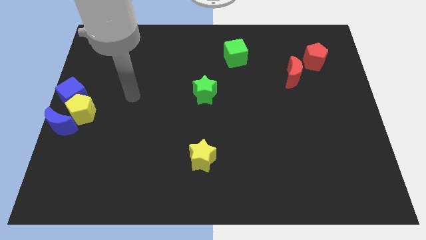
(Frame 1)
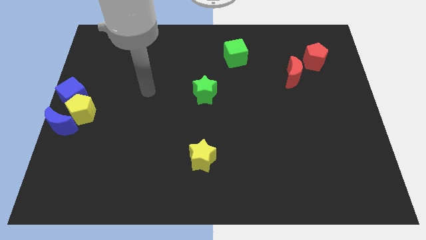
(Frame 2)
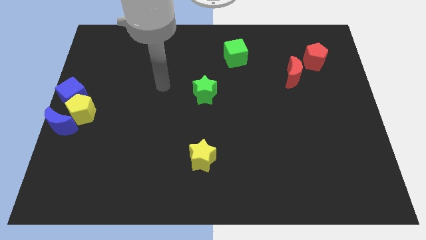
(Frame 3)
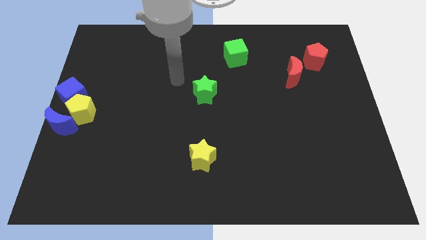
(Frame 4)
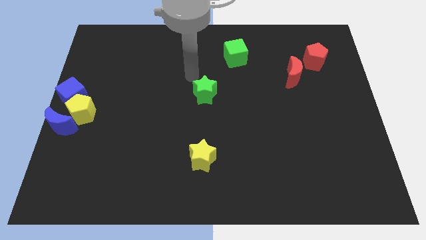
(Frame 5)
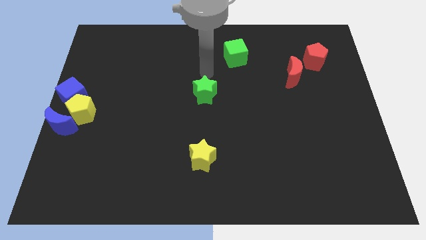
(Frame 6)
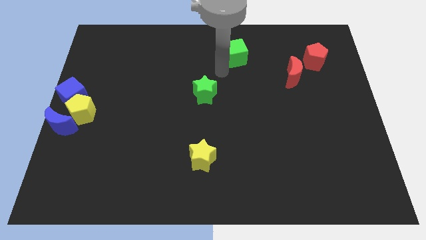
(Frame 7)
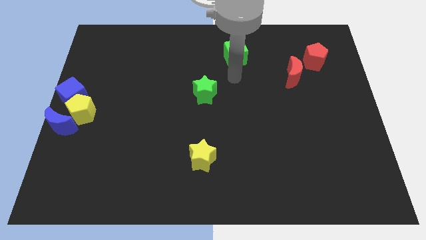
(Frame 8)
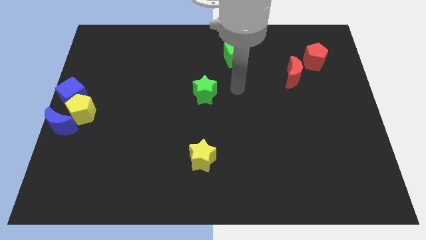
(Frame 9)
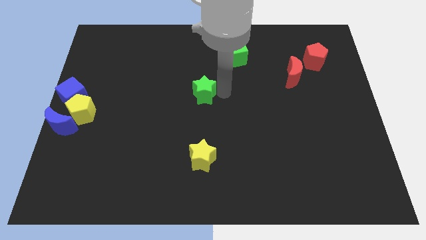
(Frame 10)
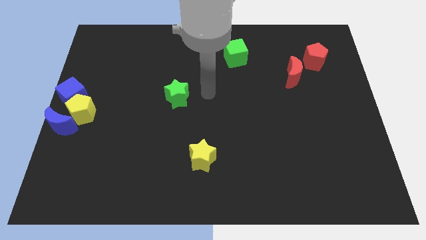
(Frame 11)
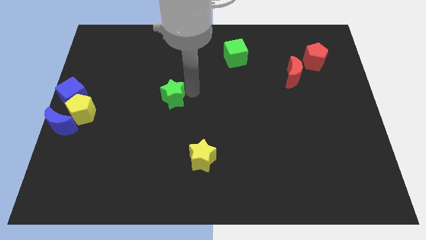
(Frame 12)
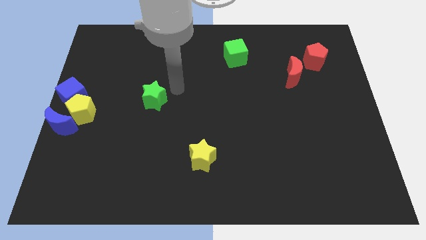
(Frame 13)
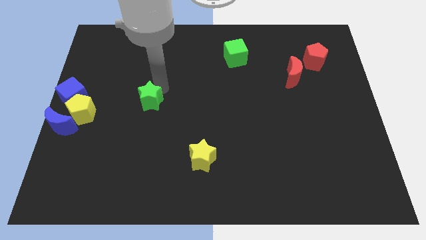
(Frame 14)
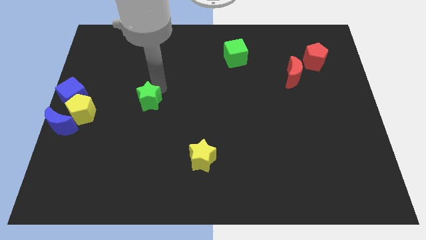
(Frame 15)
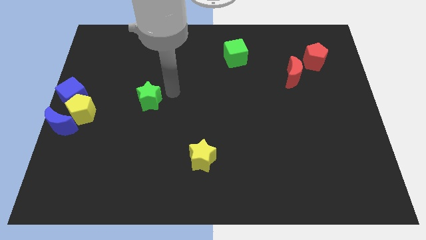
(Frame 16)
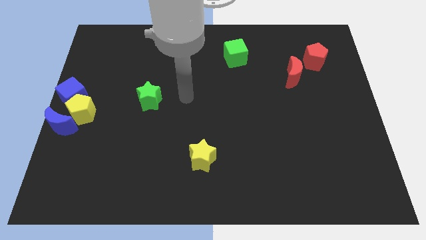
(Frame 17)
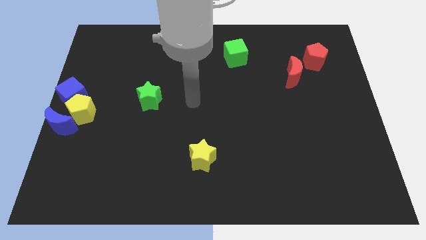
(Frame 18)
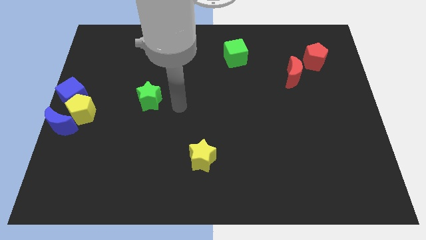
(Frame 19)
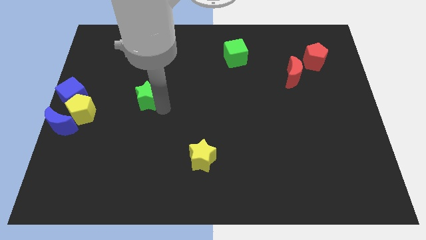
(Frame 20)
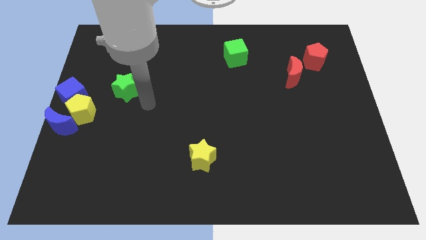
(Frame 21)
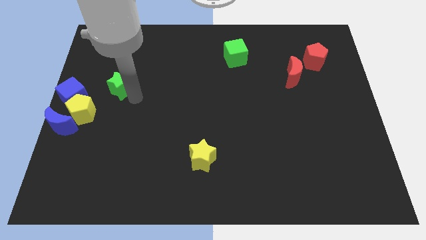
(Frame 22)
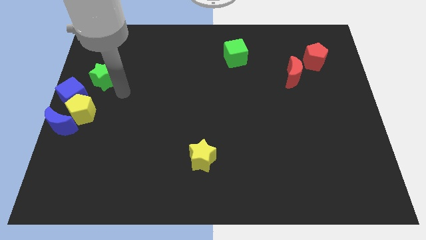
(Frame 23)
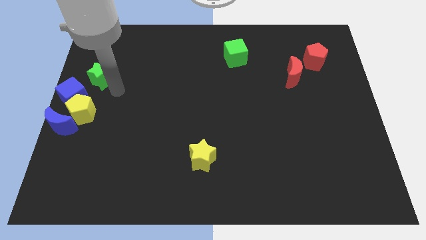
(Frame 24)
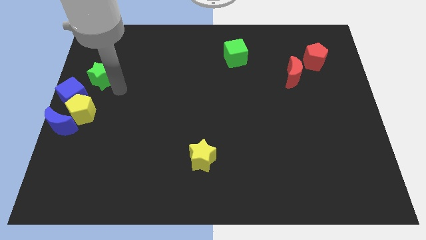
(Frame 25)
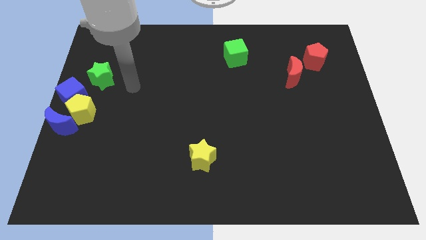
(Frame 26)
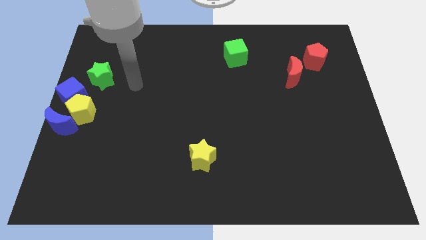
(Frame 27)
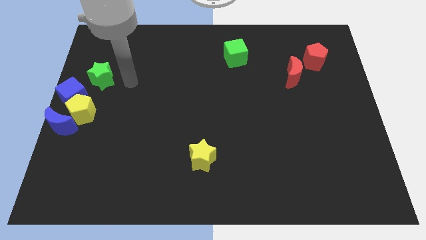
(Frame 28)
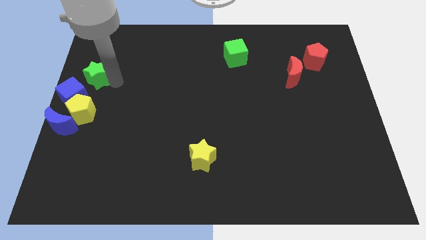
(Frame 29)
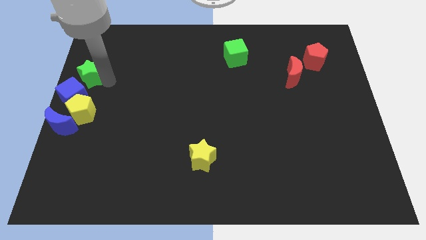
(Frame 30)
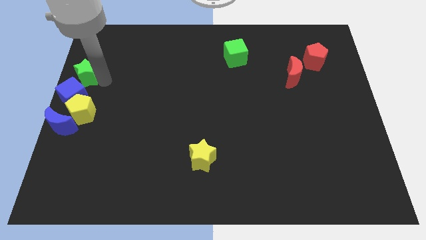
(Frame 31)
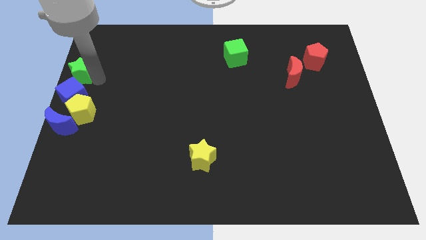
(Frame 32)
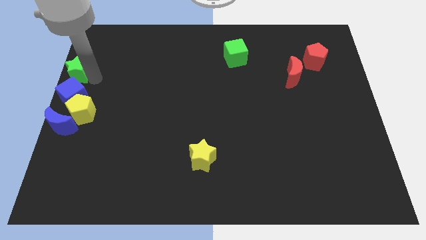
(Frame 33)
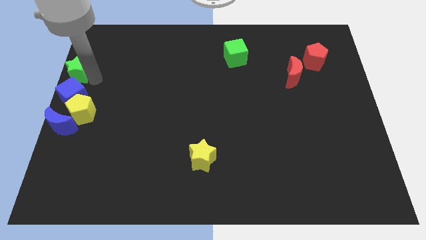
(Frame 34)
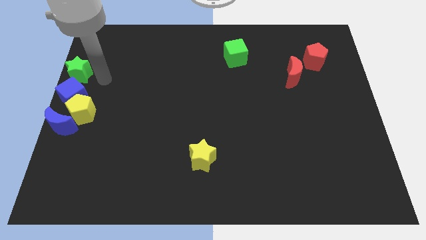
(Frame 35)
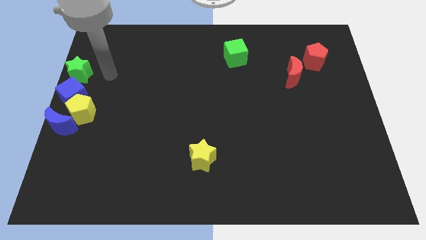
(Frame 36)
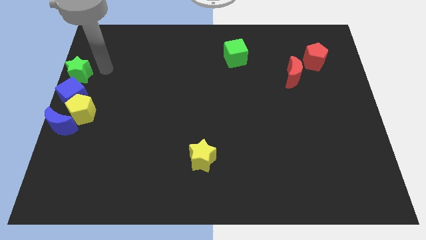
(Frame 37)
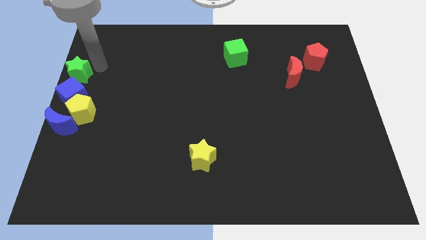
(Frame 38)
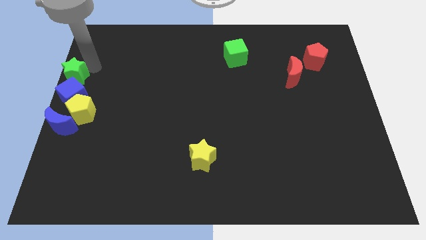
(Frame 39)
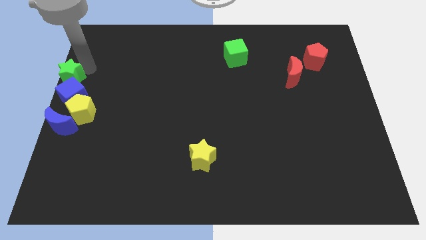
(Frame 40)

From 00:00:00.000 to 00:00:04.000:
place the green star above blue cube

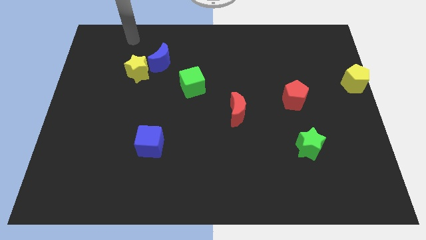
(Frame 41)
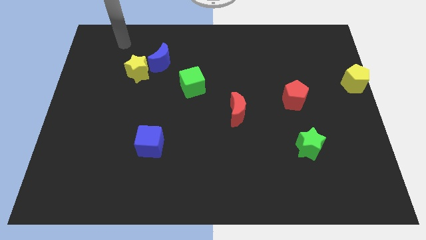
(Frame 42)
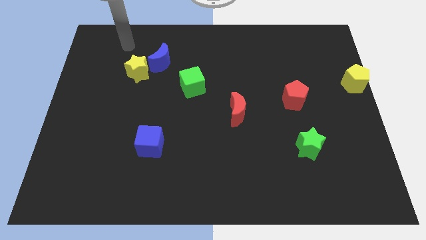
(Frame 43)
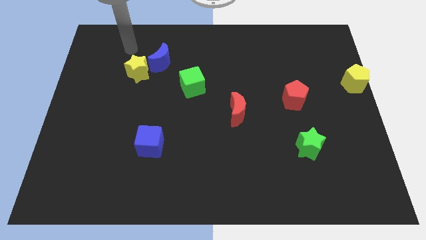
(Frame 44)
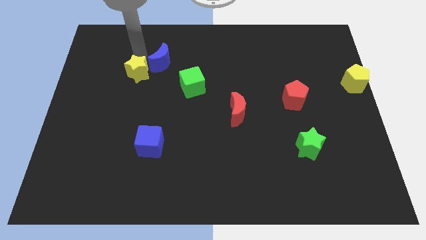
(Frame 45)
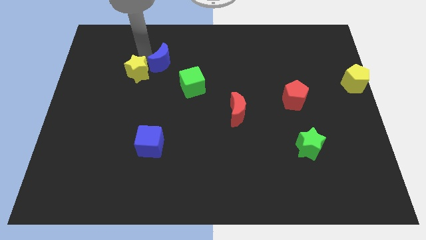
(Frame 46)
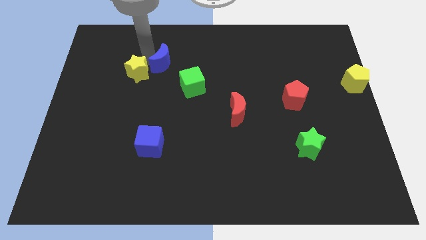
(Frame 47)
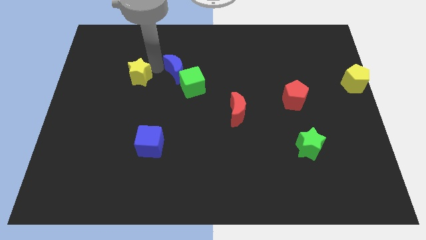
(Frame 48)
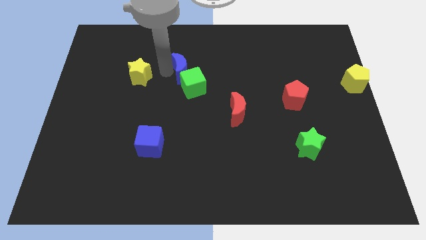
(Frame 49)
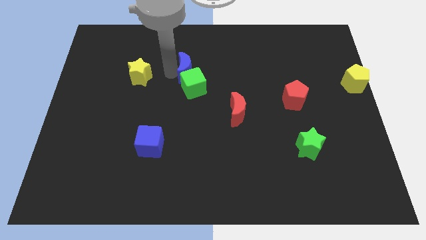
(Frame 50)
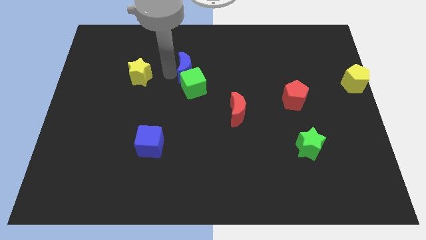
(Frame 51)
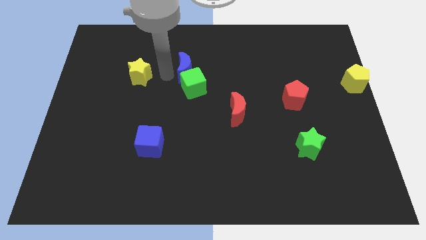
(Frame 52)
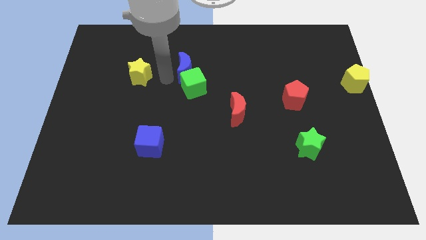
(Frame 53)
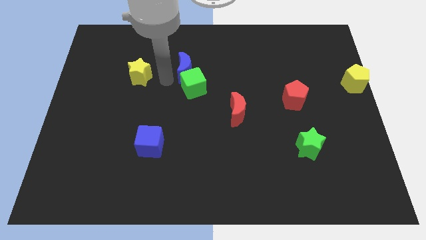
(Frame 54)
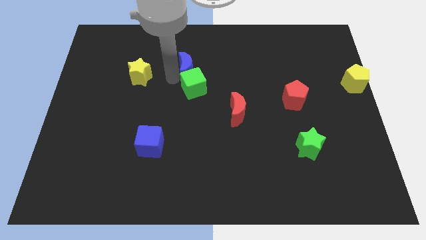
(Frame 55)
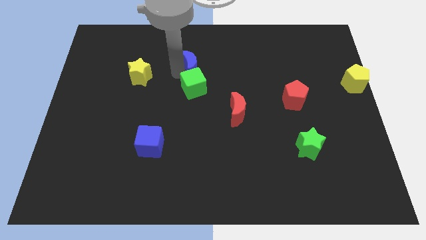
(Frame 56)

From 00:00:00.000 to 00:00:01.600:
push blue crescent above green cube

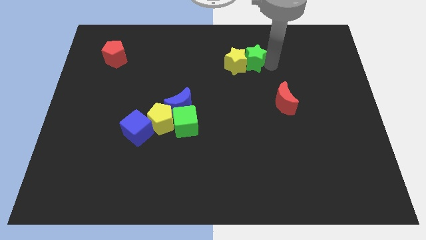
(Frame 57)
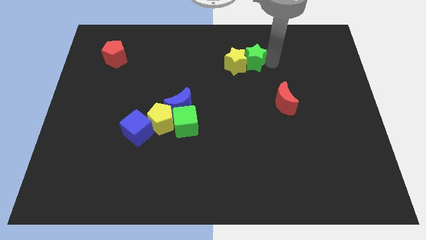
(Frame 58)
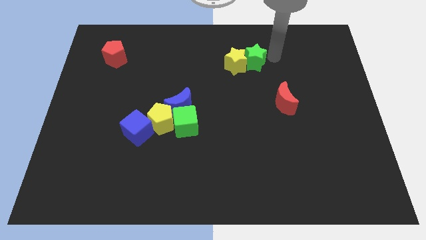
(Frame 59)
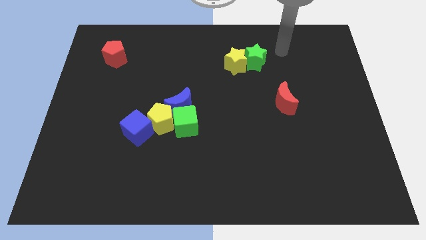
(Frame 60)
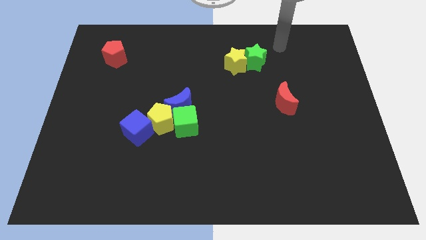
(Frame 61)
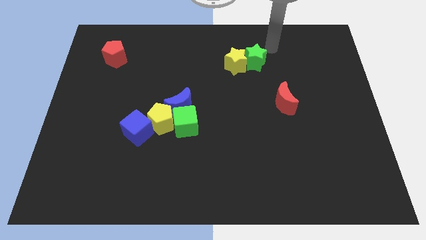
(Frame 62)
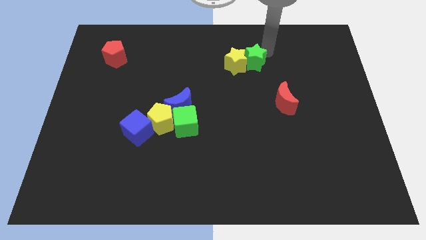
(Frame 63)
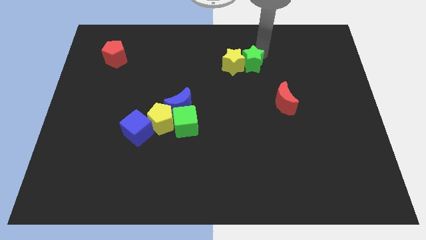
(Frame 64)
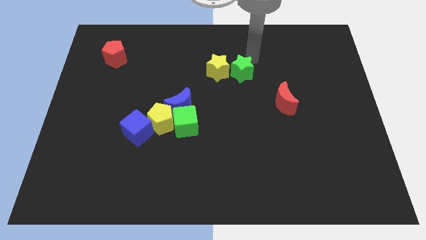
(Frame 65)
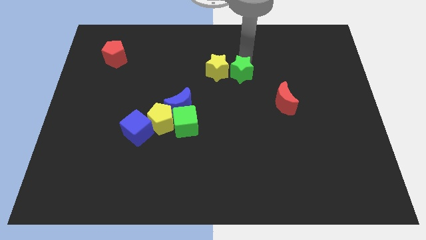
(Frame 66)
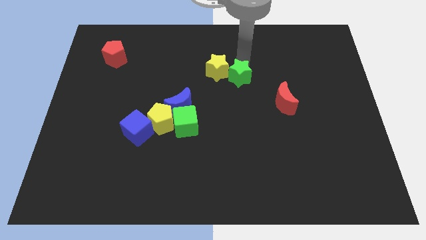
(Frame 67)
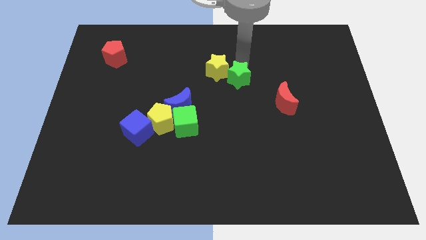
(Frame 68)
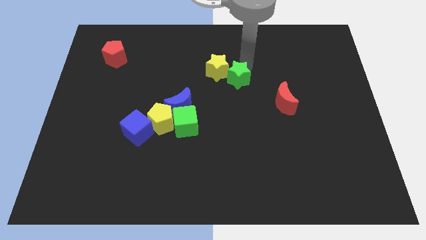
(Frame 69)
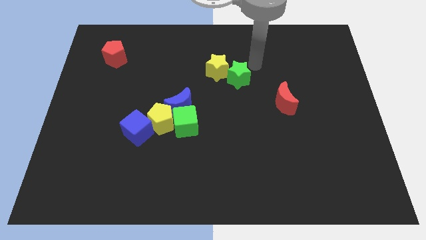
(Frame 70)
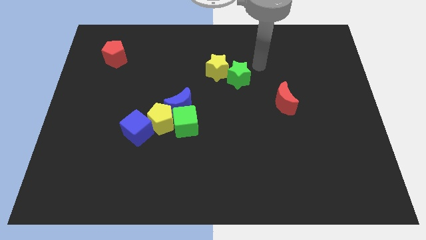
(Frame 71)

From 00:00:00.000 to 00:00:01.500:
push the yellow and green star towards the center of the board

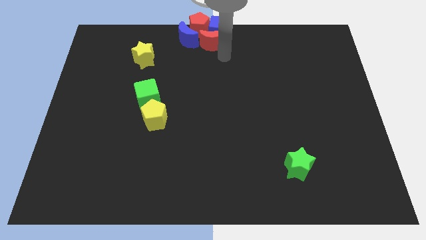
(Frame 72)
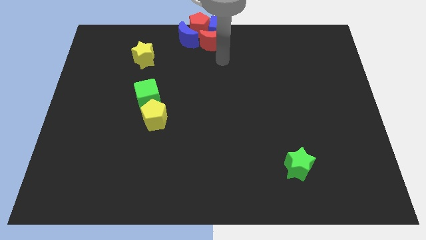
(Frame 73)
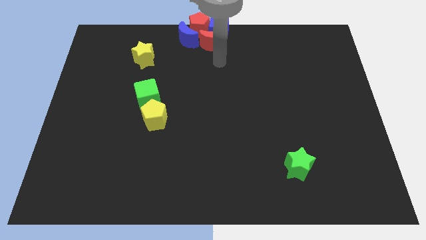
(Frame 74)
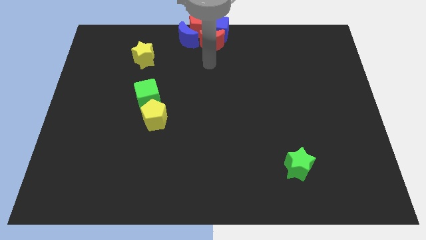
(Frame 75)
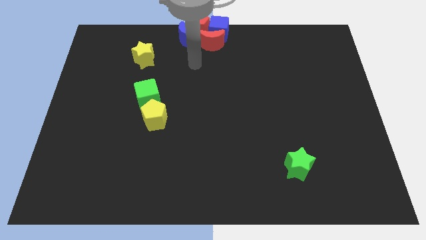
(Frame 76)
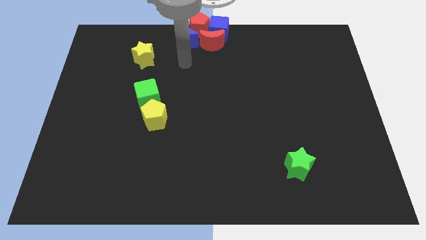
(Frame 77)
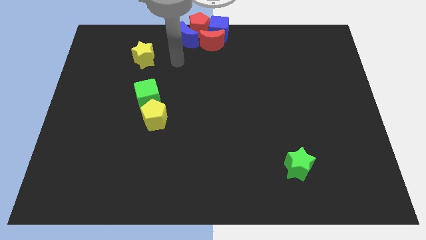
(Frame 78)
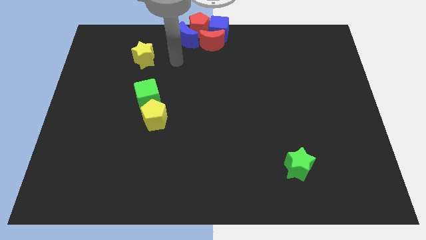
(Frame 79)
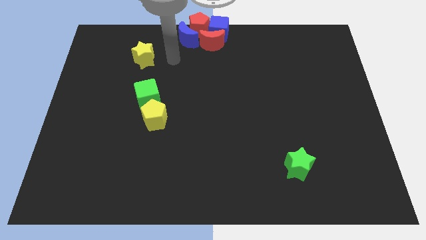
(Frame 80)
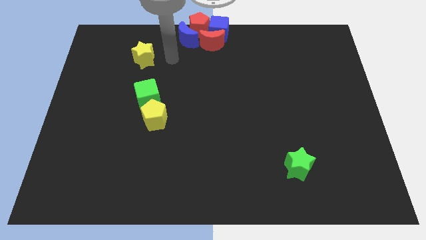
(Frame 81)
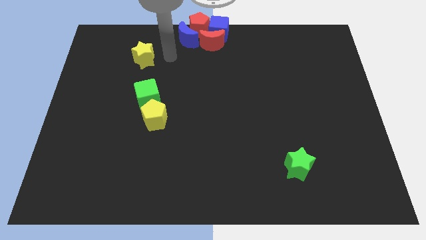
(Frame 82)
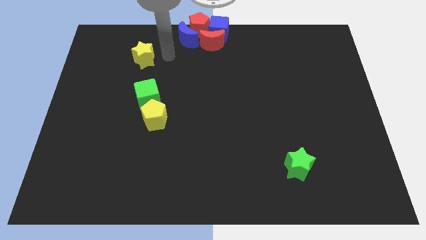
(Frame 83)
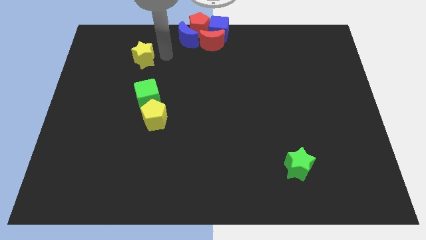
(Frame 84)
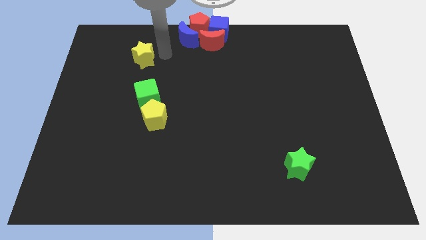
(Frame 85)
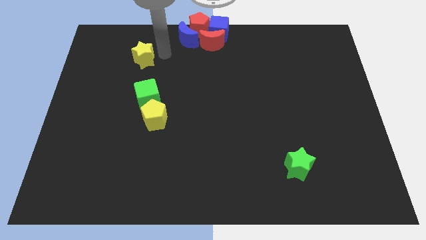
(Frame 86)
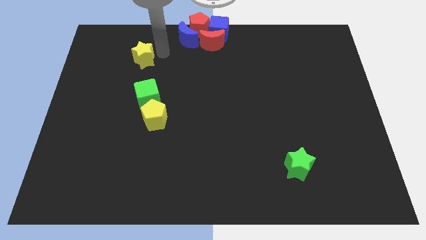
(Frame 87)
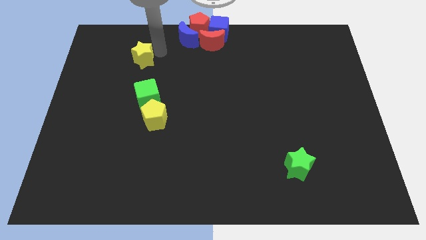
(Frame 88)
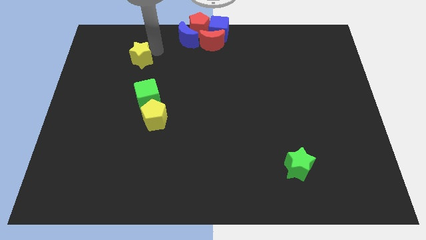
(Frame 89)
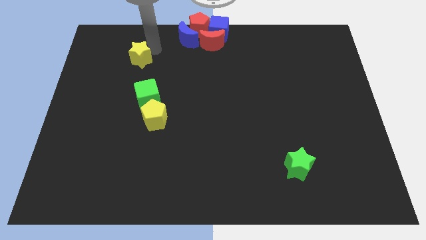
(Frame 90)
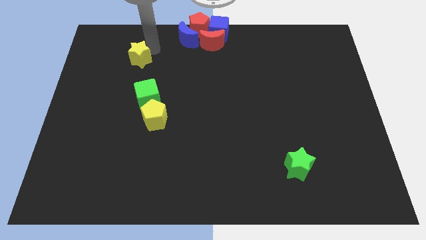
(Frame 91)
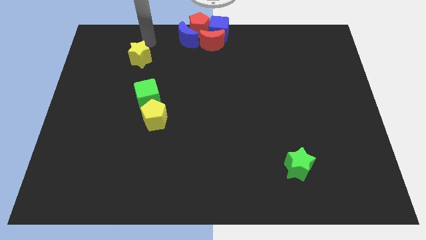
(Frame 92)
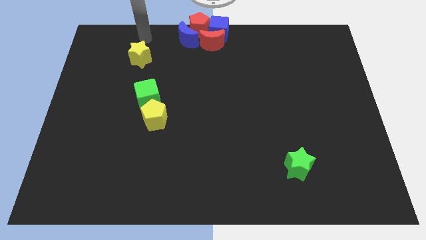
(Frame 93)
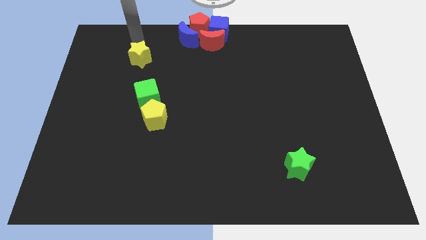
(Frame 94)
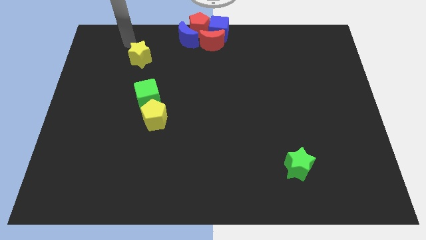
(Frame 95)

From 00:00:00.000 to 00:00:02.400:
slightly move the yellow star to the left
